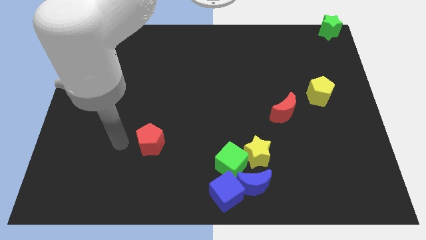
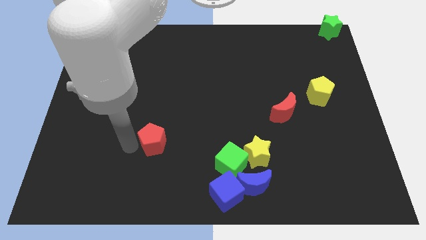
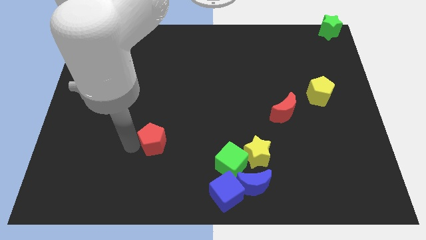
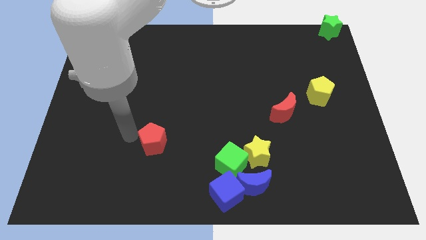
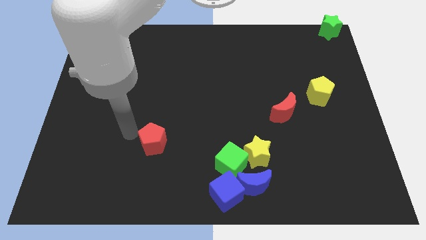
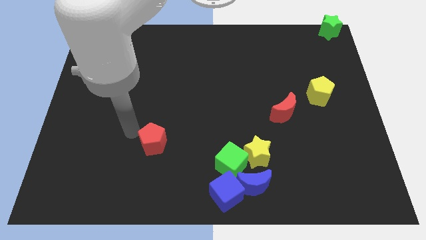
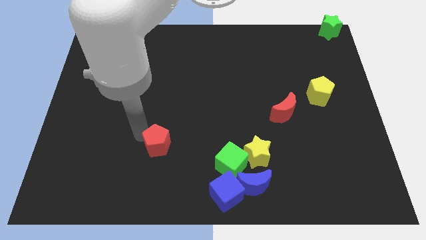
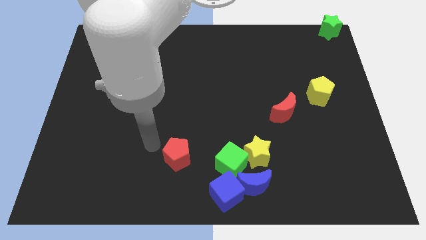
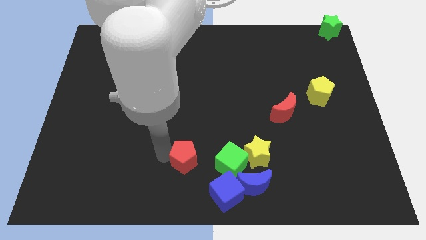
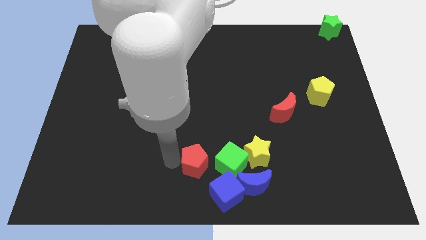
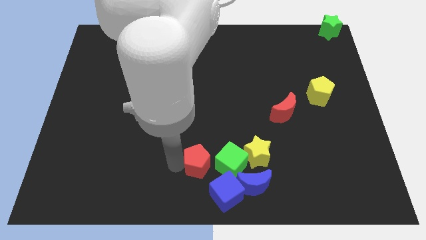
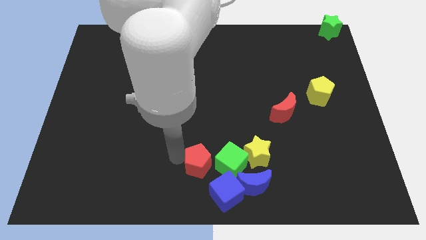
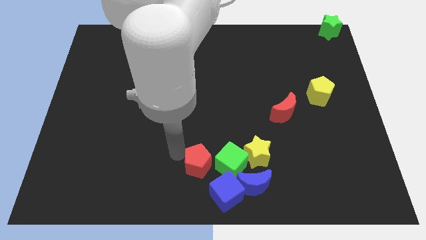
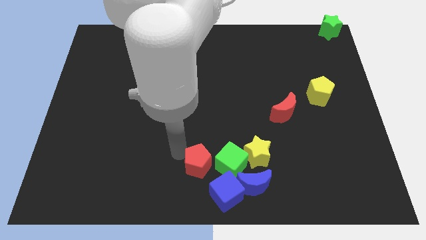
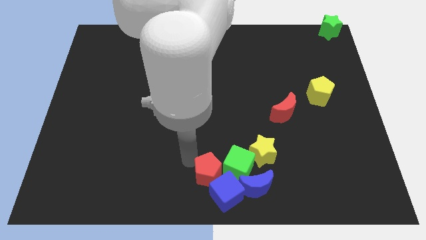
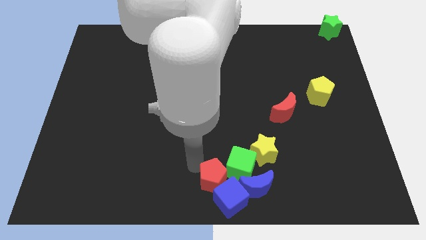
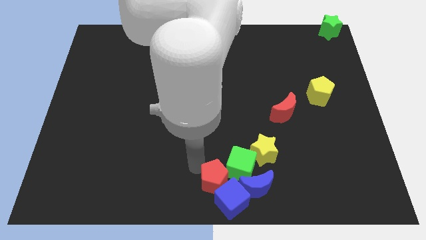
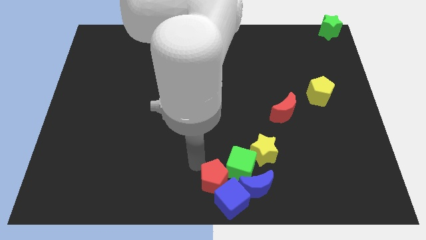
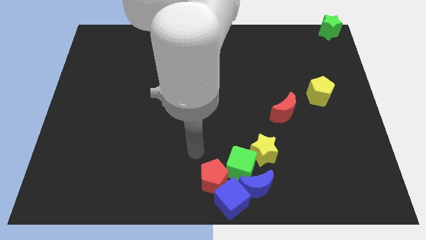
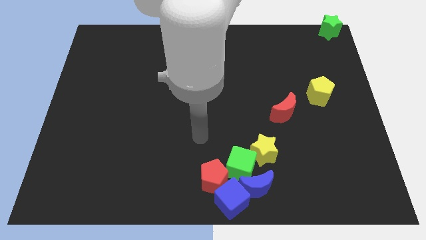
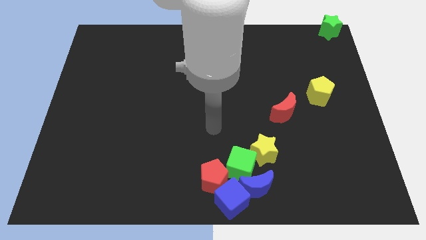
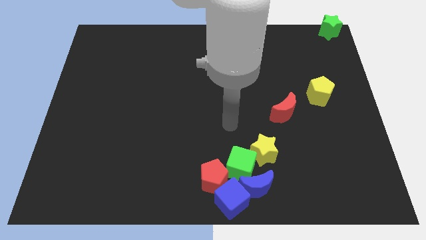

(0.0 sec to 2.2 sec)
push the red pentagon into the group of the blocks

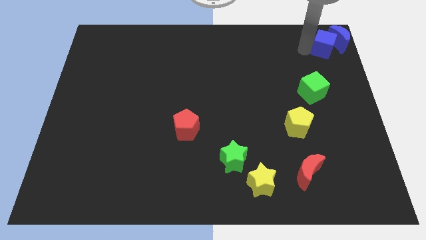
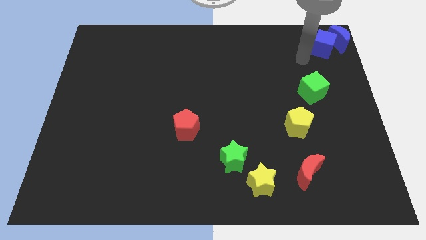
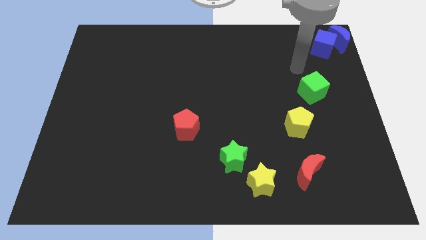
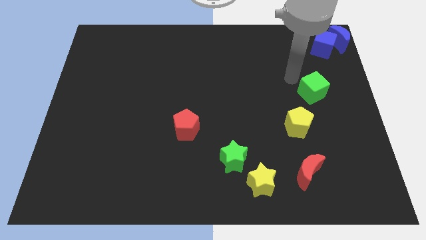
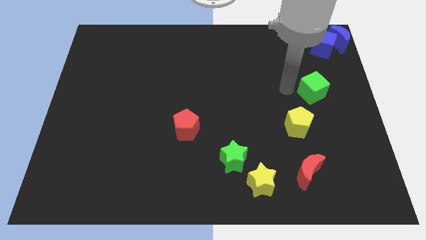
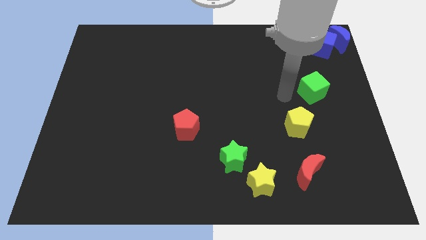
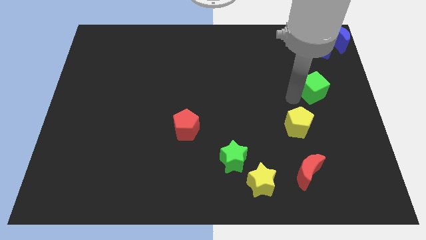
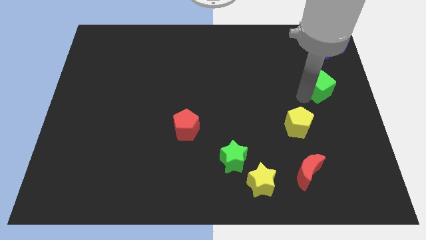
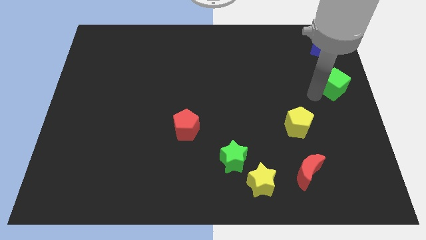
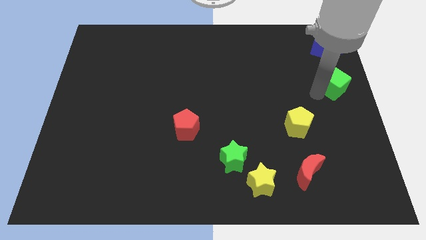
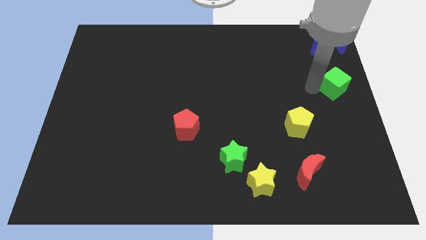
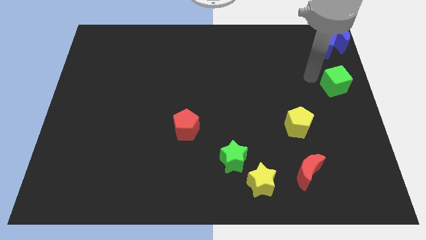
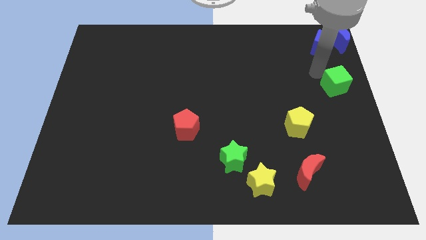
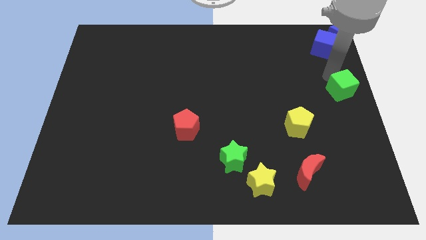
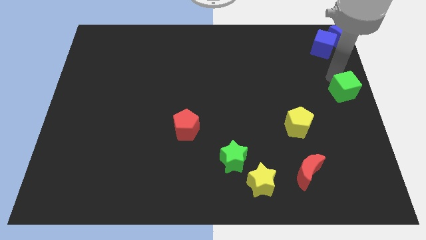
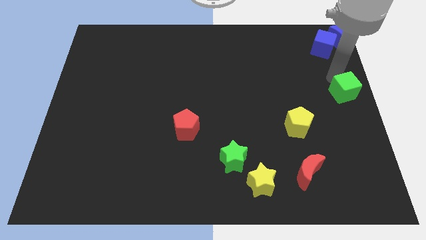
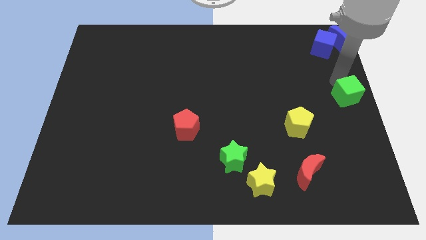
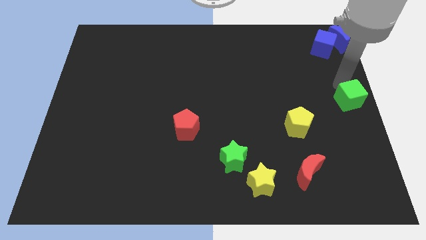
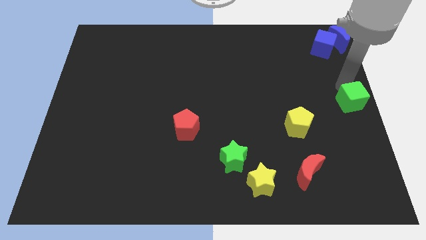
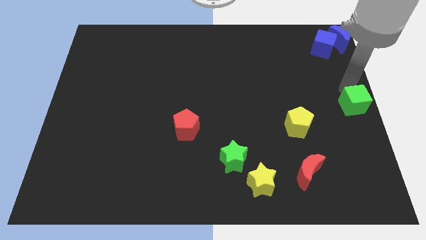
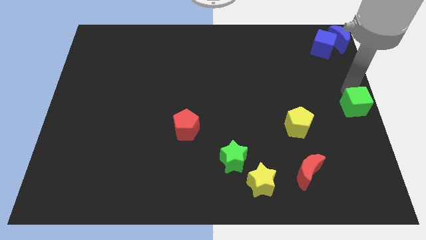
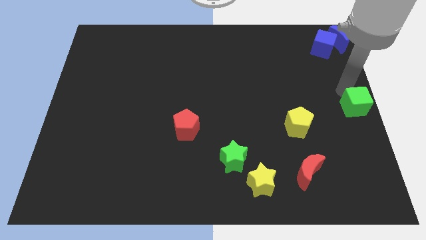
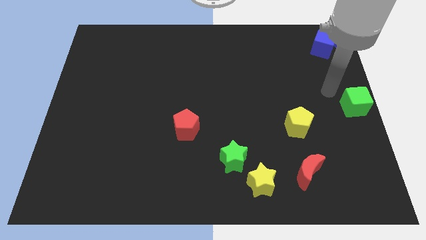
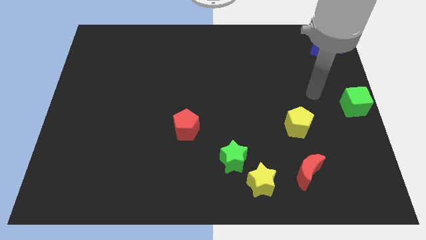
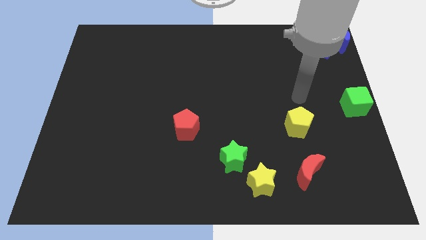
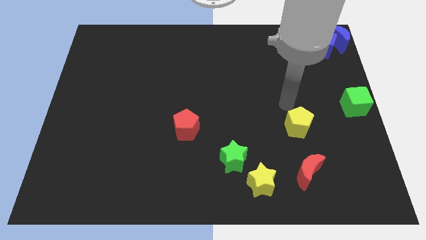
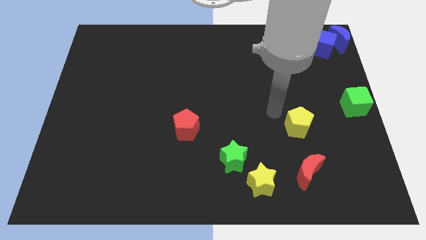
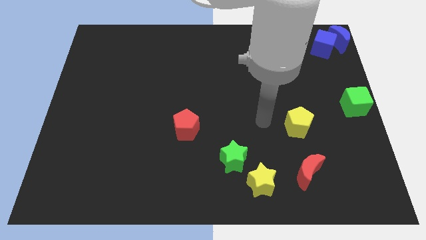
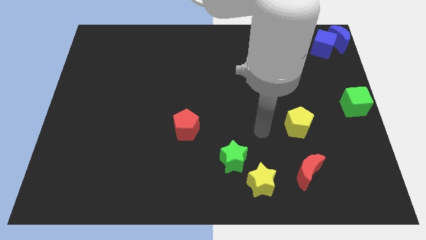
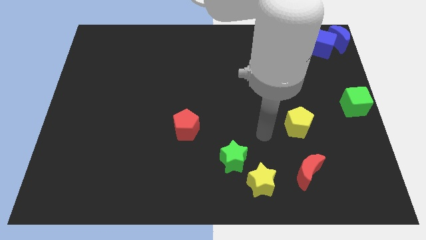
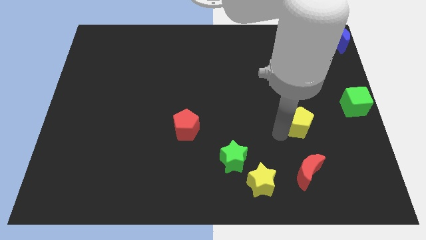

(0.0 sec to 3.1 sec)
move the green cube to the right center of the board

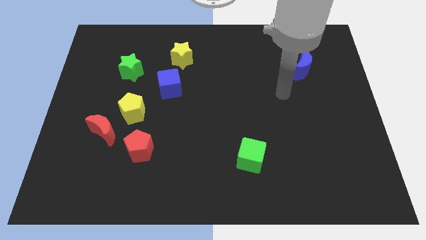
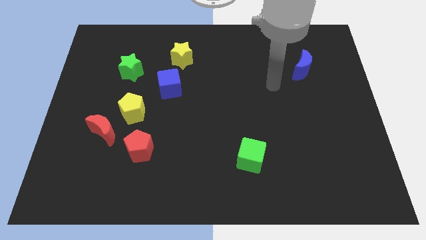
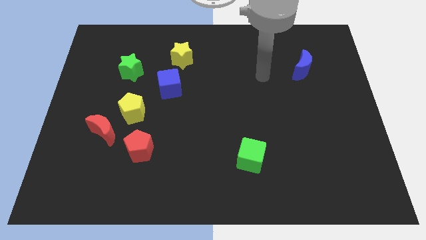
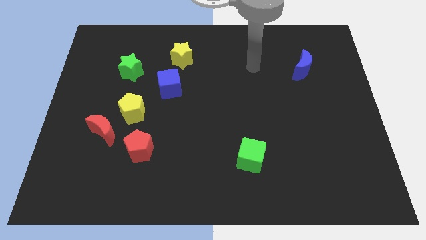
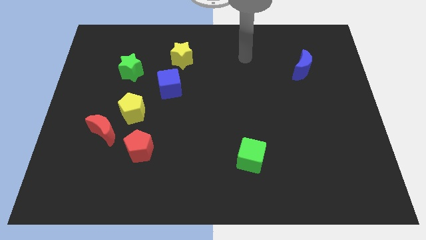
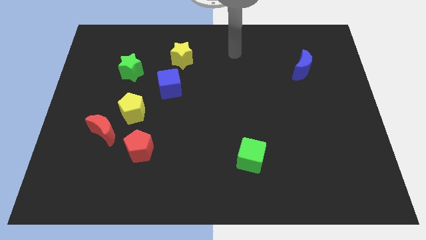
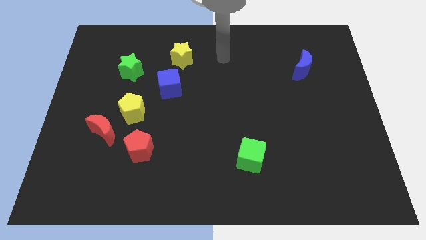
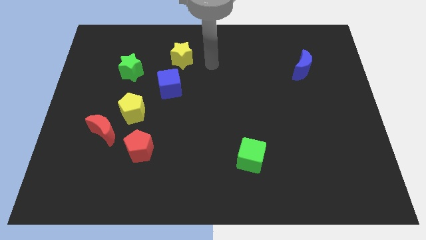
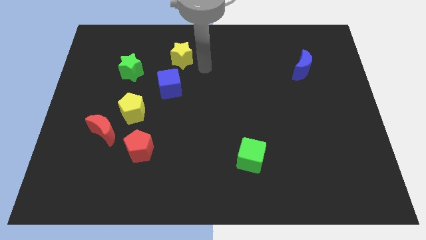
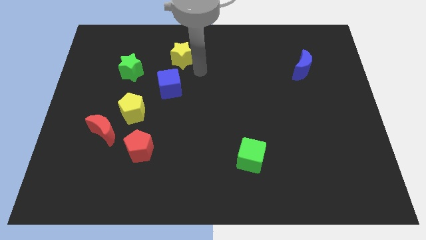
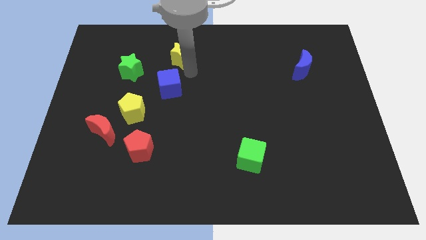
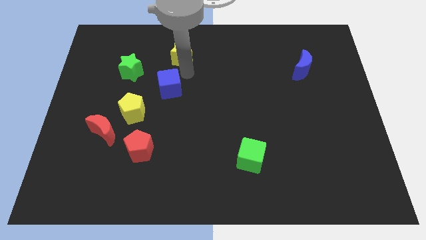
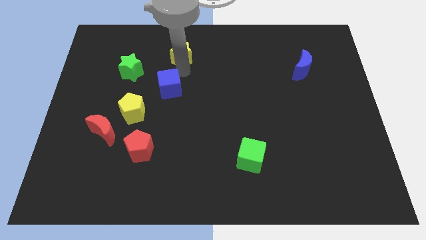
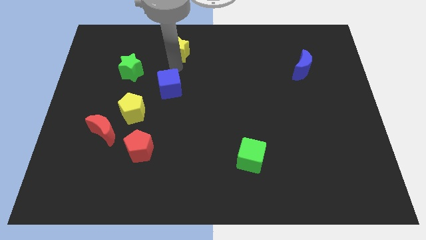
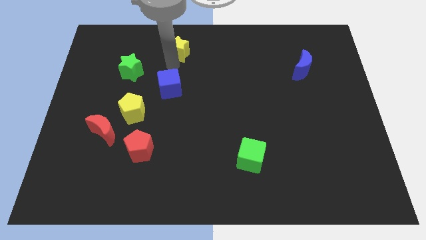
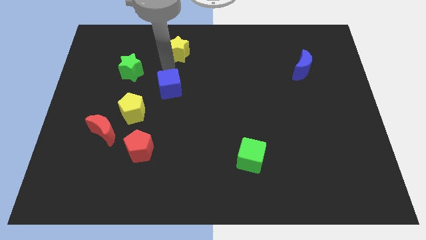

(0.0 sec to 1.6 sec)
push the yellow star slightly up

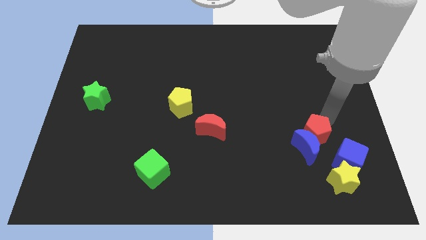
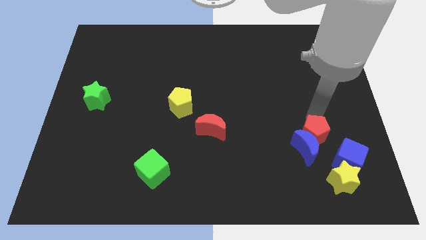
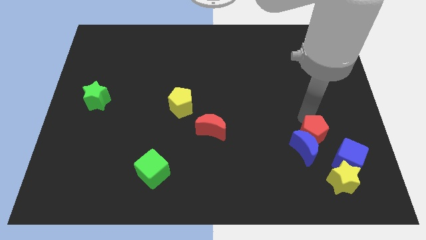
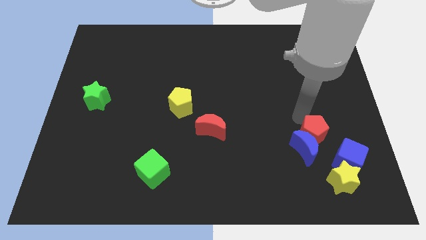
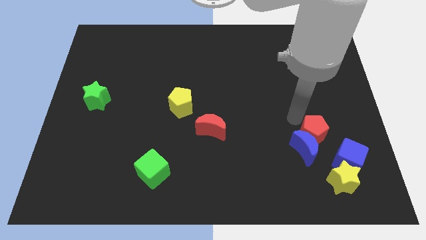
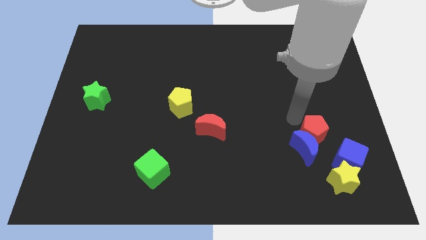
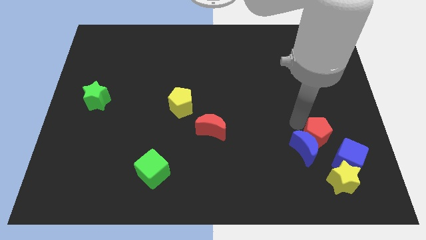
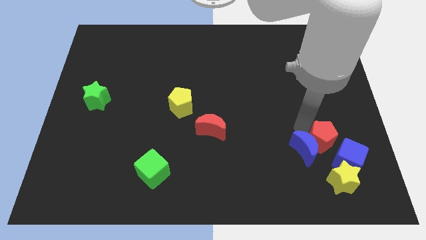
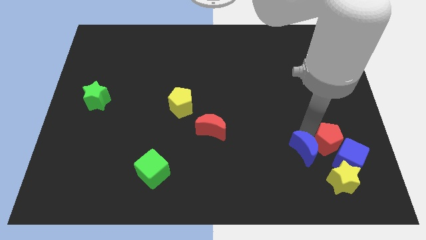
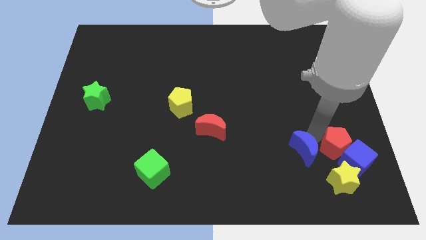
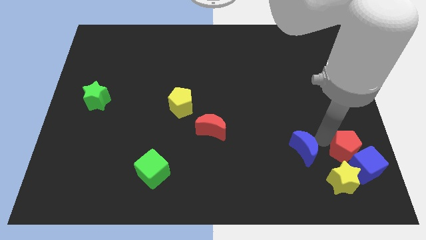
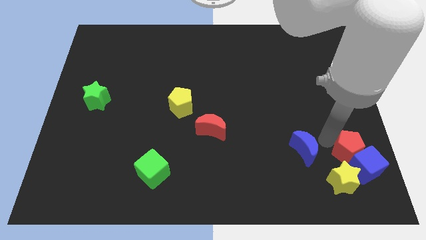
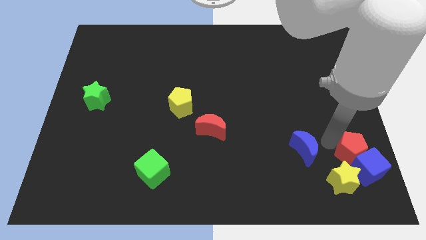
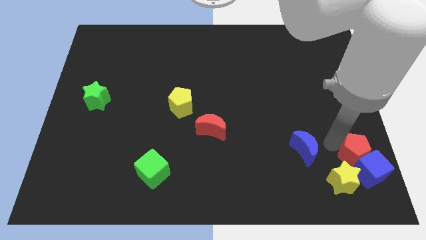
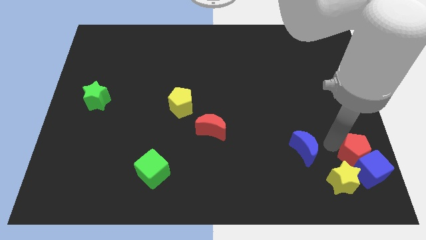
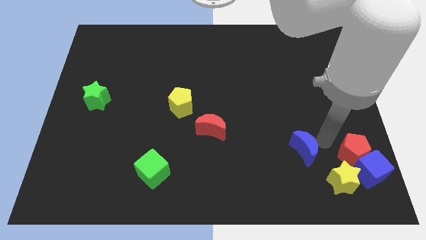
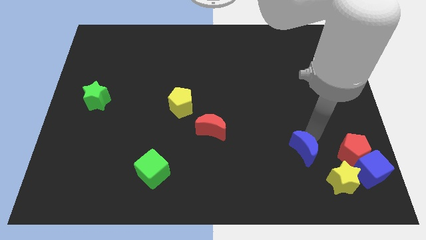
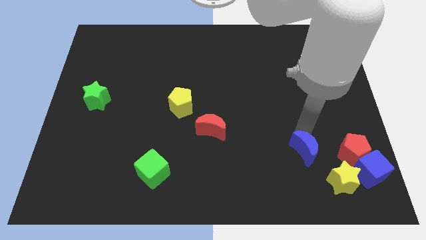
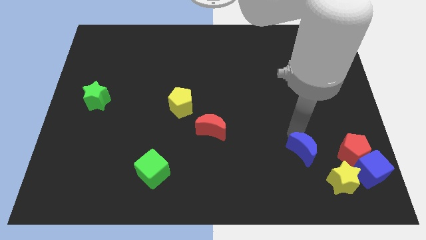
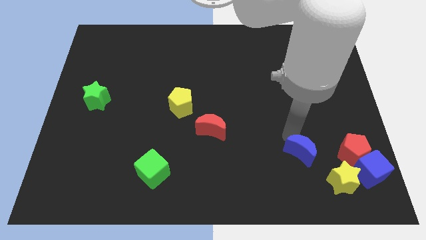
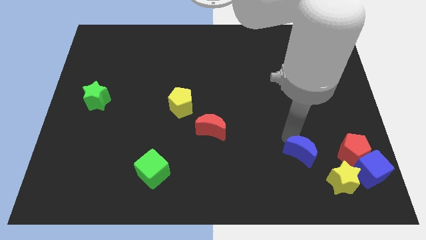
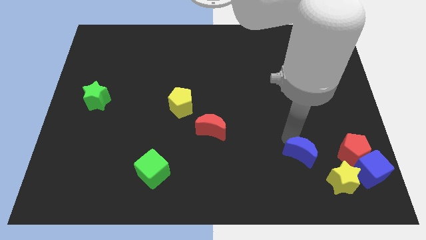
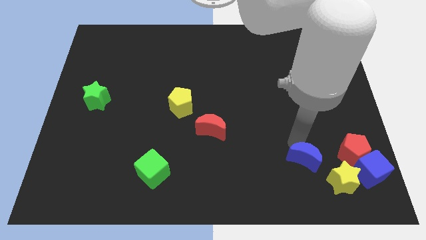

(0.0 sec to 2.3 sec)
move the red pentagon into the blue cube
